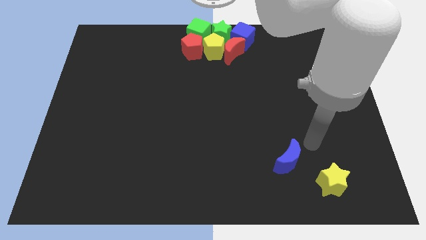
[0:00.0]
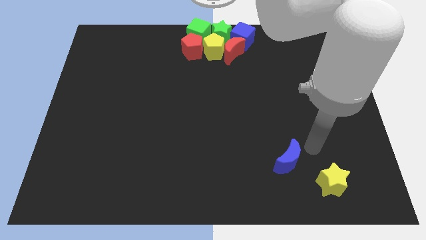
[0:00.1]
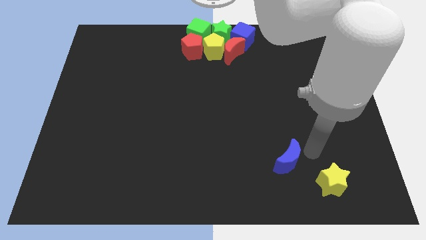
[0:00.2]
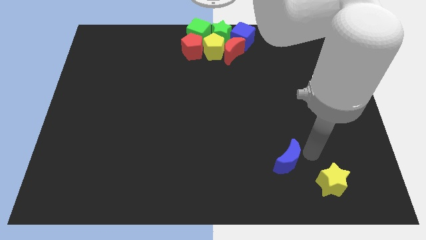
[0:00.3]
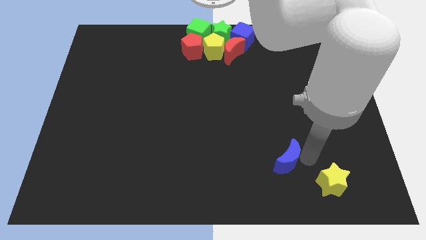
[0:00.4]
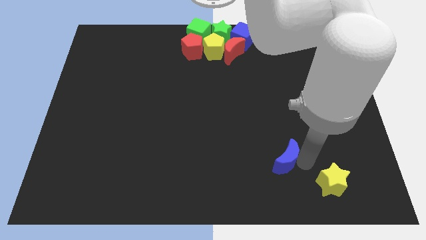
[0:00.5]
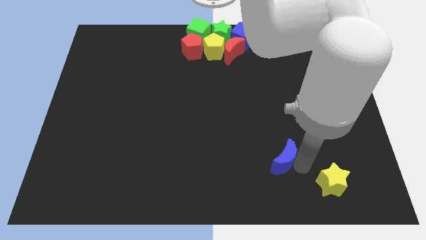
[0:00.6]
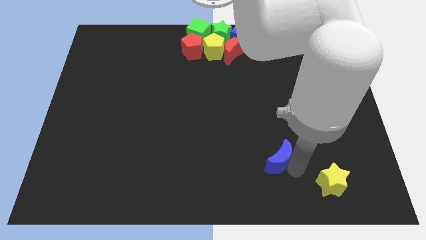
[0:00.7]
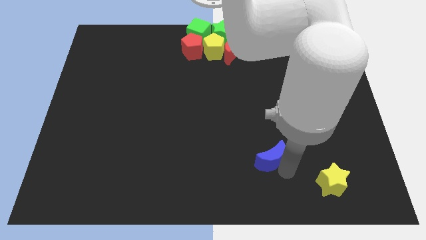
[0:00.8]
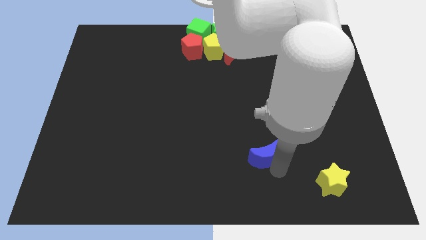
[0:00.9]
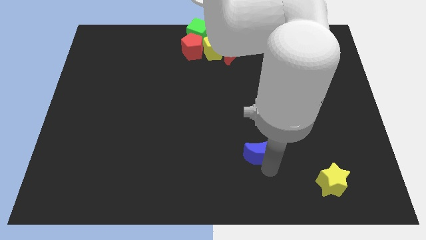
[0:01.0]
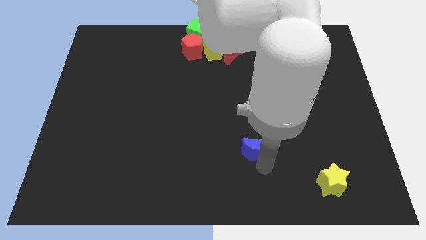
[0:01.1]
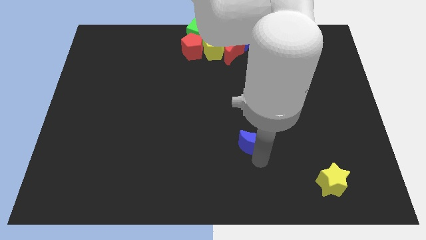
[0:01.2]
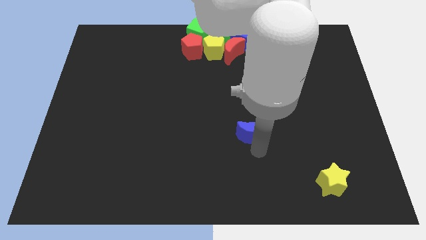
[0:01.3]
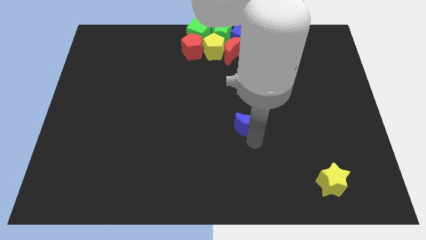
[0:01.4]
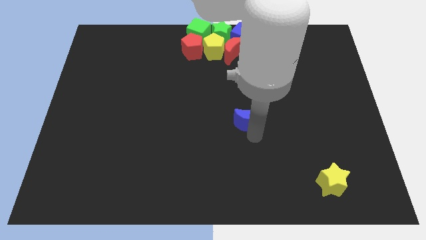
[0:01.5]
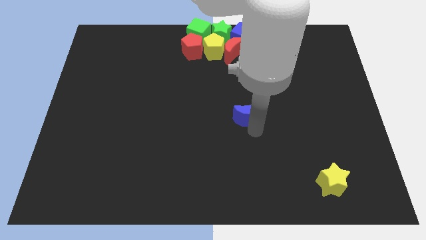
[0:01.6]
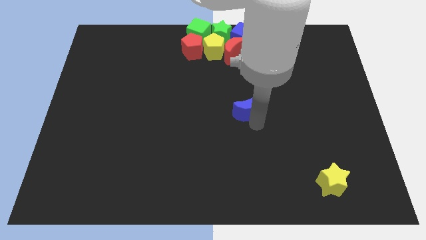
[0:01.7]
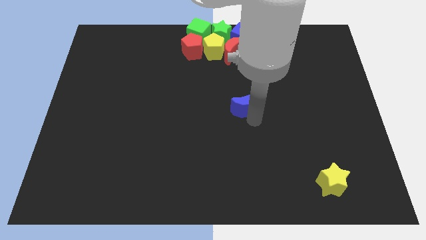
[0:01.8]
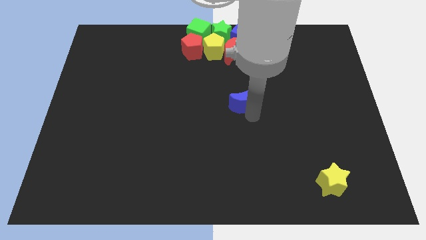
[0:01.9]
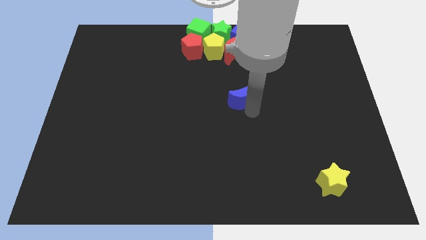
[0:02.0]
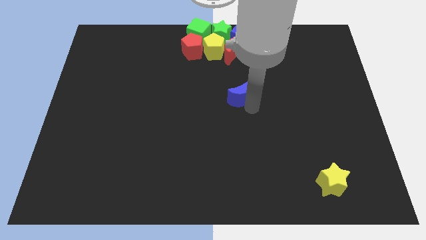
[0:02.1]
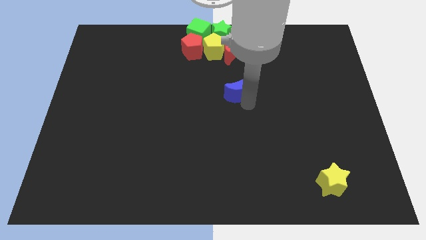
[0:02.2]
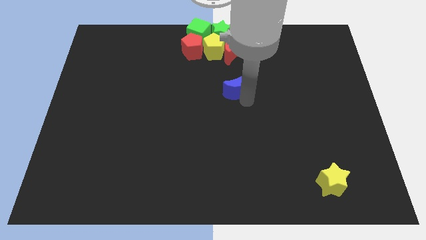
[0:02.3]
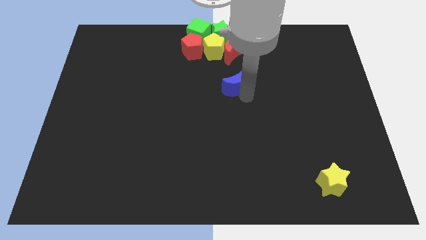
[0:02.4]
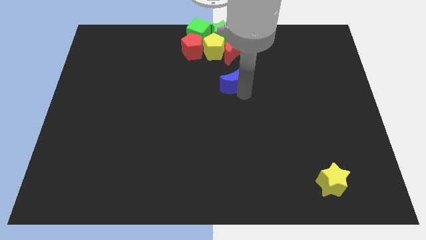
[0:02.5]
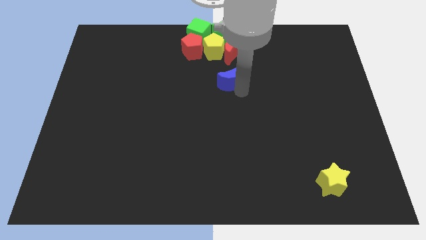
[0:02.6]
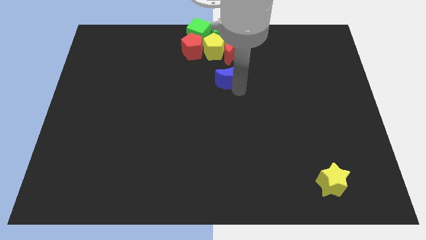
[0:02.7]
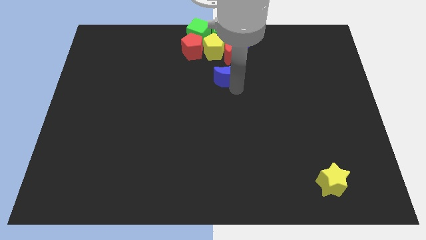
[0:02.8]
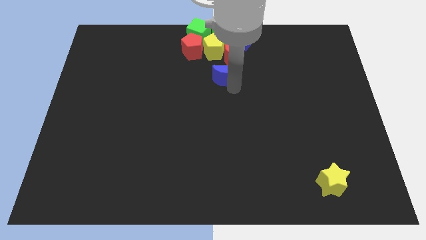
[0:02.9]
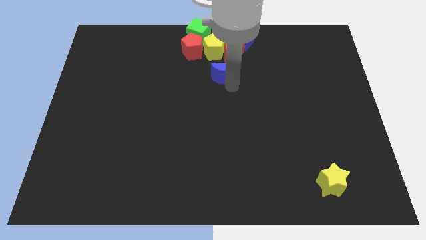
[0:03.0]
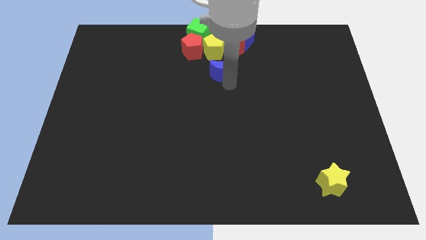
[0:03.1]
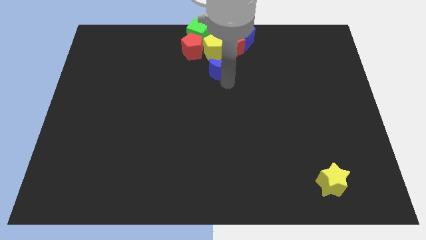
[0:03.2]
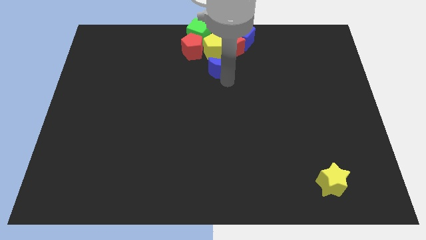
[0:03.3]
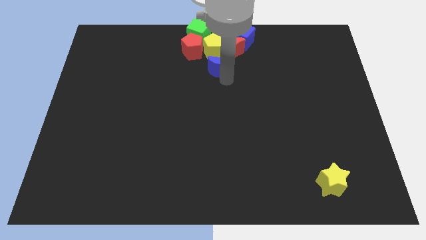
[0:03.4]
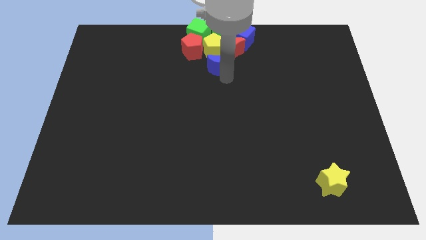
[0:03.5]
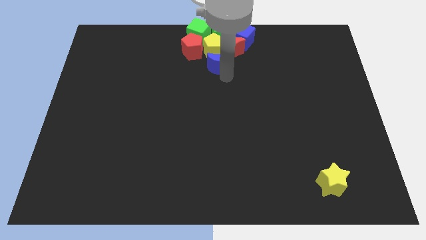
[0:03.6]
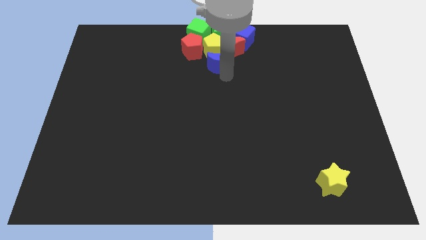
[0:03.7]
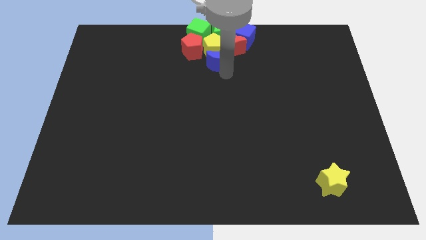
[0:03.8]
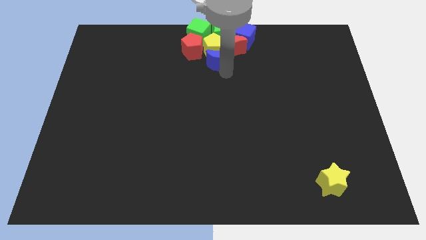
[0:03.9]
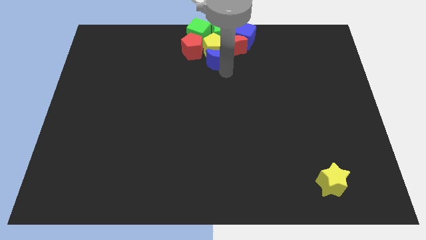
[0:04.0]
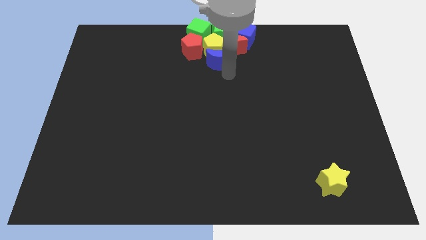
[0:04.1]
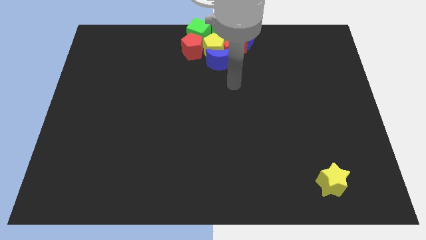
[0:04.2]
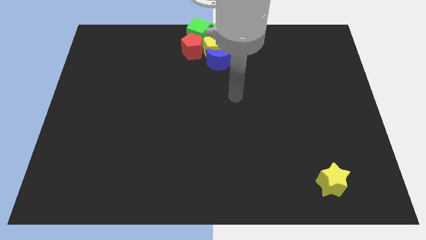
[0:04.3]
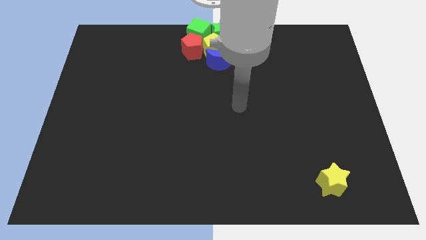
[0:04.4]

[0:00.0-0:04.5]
push the blue crescent below the yellow pentagon

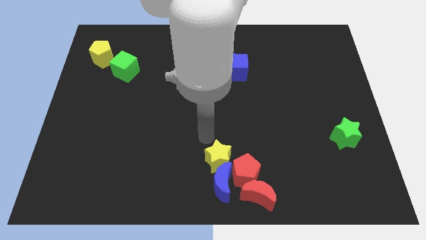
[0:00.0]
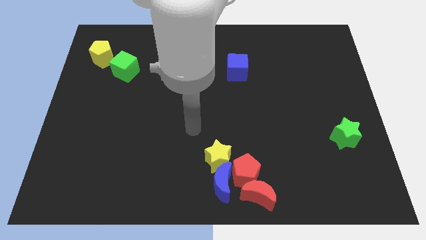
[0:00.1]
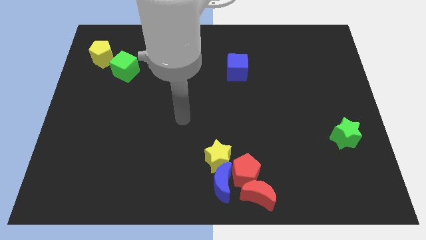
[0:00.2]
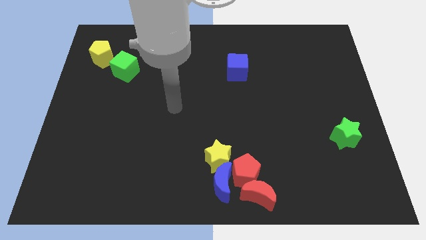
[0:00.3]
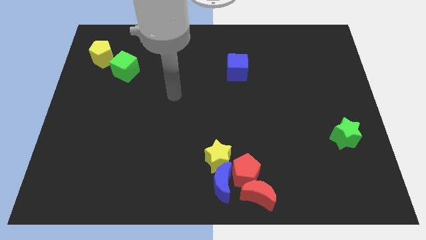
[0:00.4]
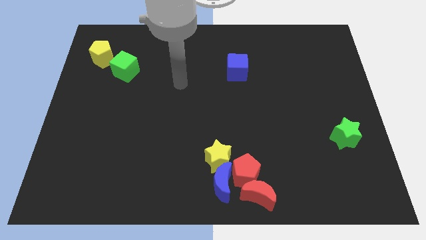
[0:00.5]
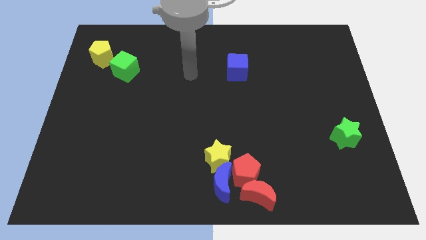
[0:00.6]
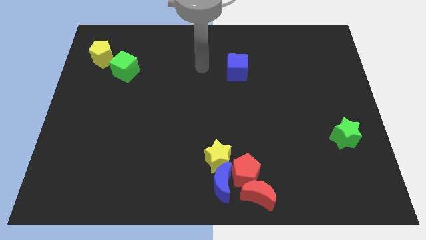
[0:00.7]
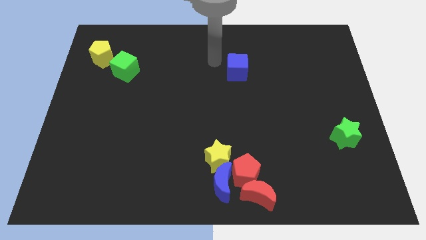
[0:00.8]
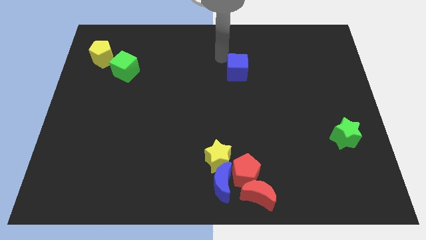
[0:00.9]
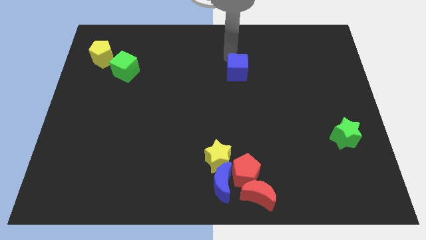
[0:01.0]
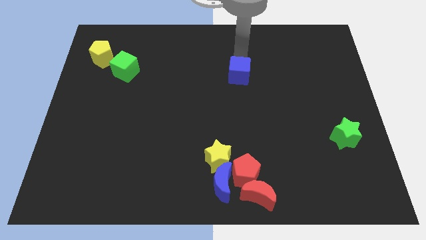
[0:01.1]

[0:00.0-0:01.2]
place your arm to the top of blue cube

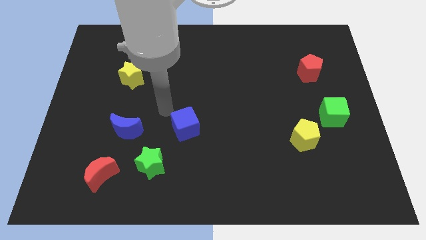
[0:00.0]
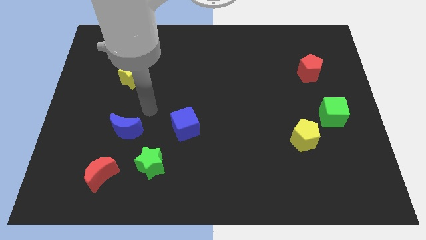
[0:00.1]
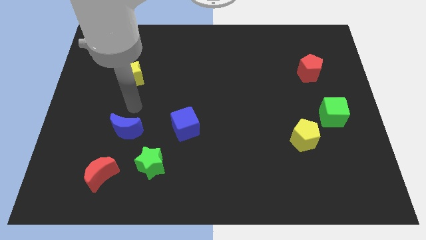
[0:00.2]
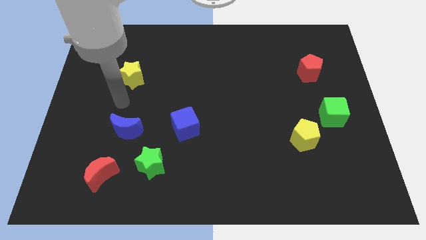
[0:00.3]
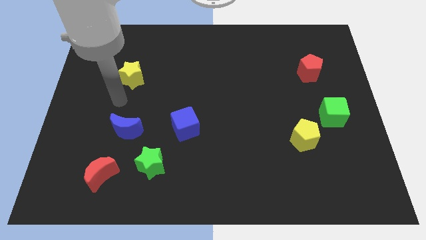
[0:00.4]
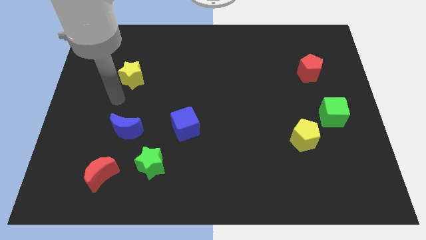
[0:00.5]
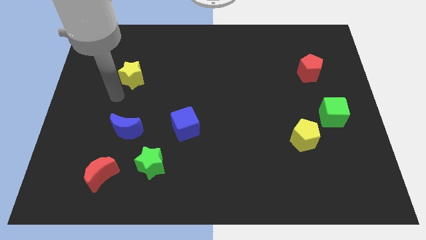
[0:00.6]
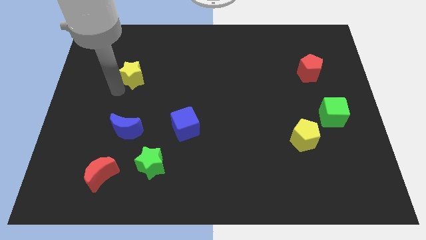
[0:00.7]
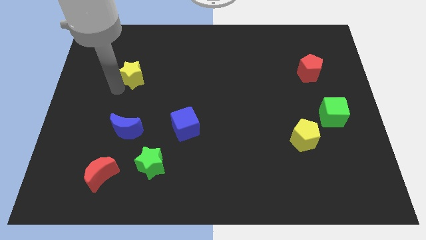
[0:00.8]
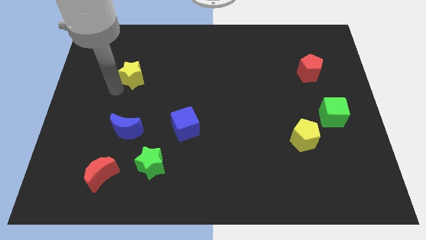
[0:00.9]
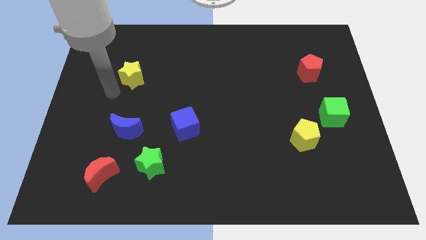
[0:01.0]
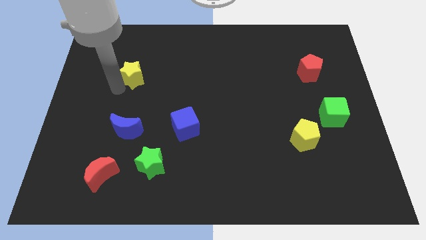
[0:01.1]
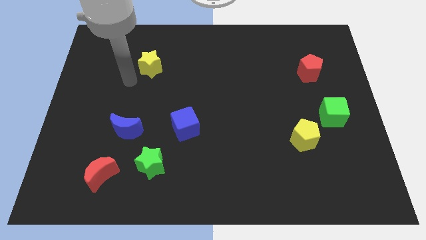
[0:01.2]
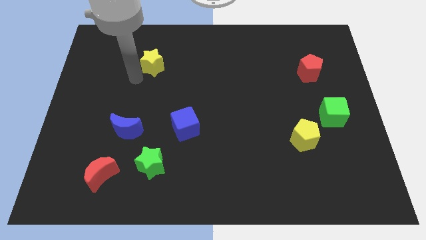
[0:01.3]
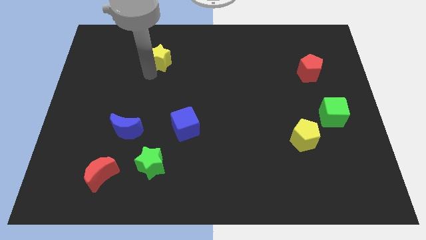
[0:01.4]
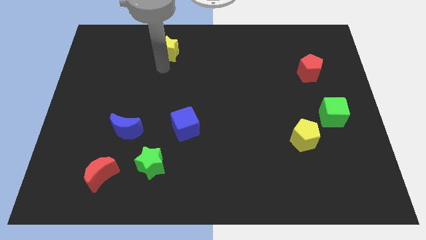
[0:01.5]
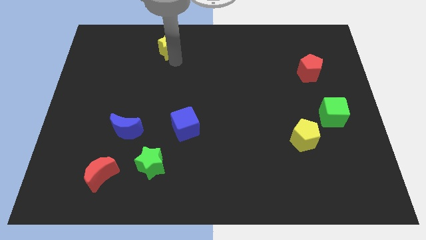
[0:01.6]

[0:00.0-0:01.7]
move the yellow star towards the top

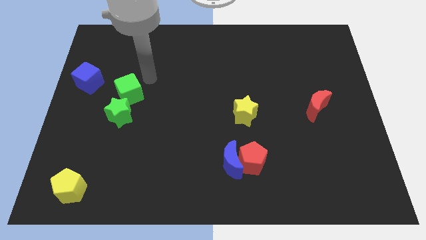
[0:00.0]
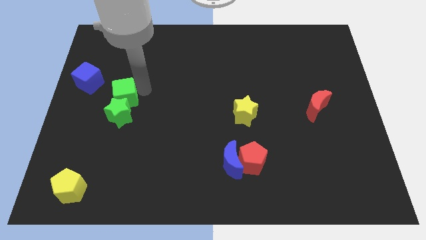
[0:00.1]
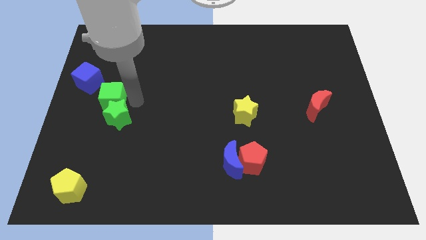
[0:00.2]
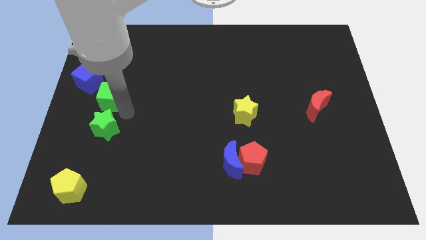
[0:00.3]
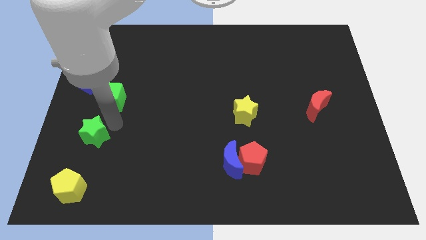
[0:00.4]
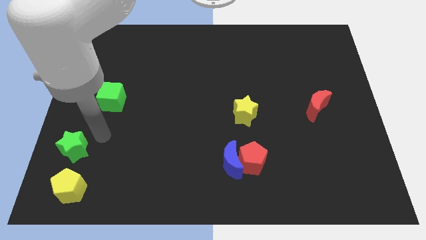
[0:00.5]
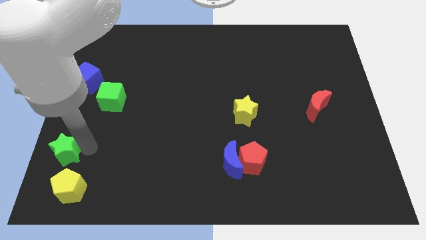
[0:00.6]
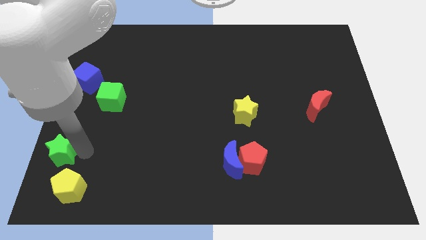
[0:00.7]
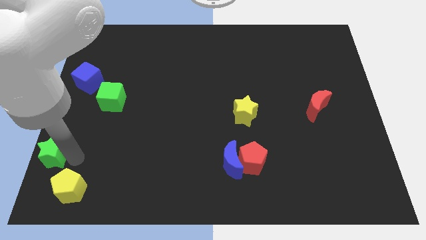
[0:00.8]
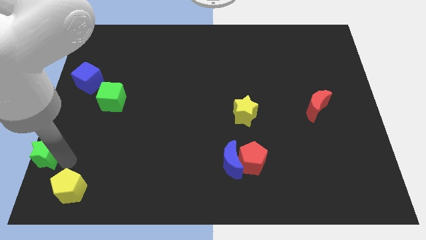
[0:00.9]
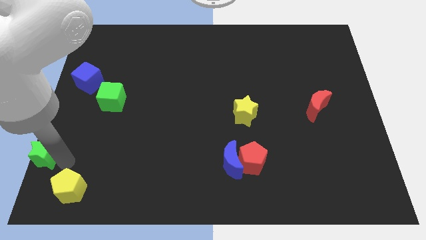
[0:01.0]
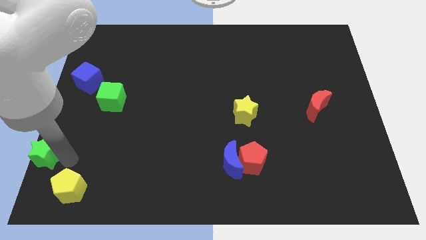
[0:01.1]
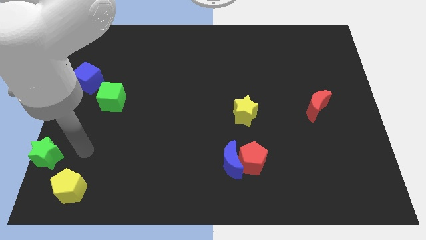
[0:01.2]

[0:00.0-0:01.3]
push the green star towards the bottom left side of the board

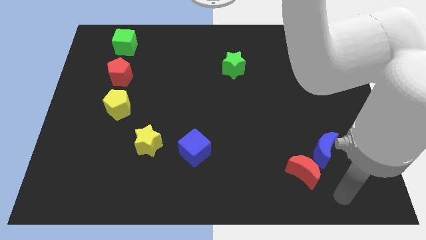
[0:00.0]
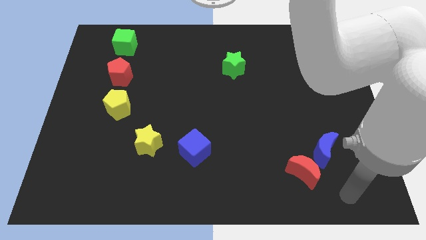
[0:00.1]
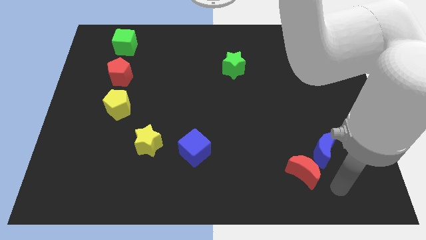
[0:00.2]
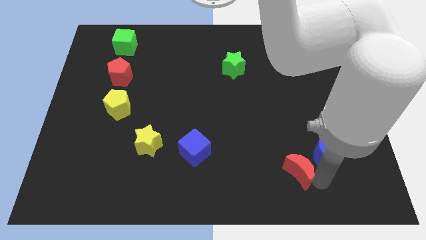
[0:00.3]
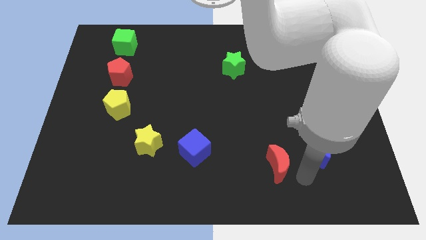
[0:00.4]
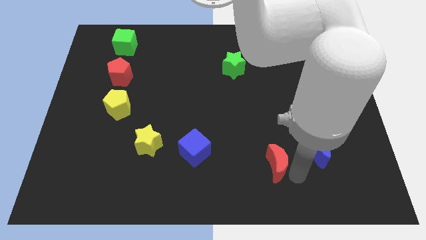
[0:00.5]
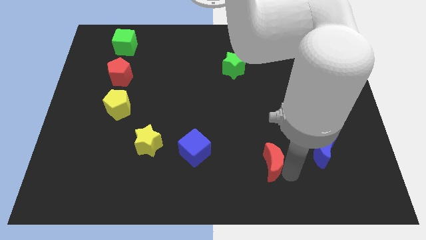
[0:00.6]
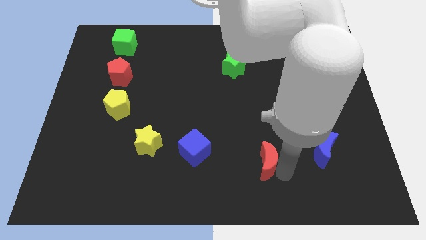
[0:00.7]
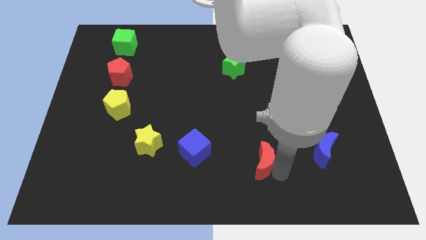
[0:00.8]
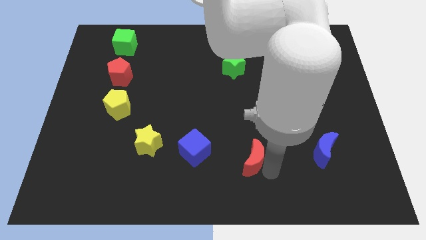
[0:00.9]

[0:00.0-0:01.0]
move the red crescent to the left
